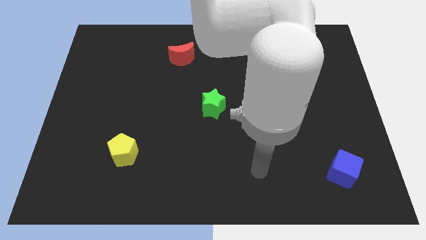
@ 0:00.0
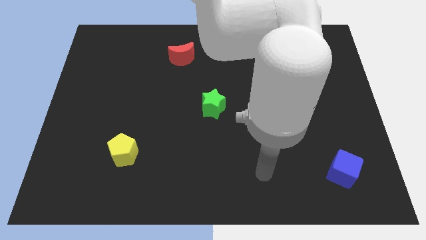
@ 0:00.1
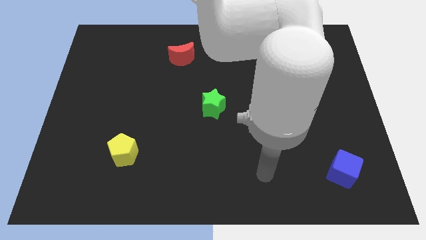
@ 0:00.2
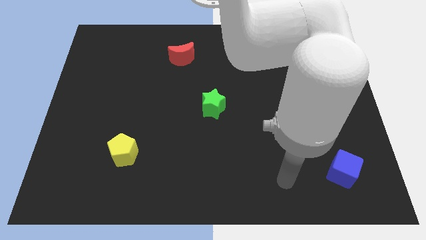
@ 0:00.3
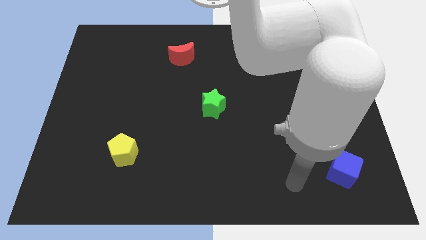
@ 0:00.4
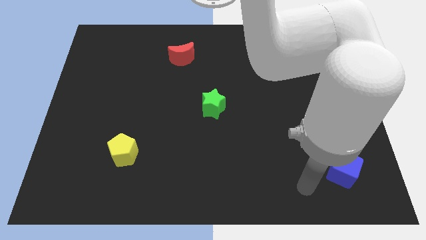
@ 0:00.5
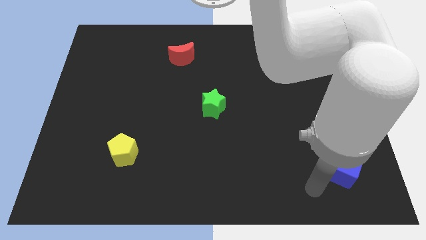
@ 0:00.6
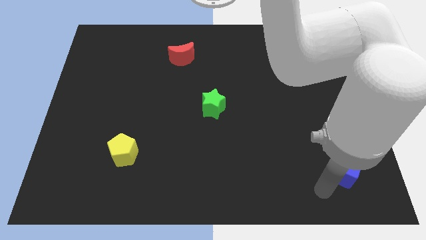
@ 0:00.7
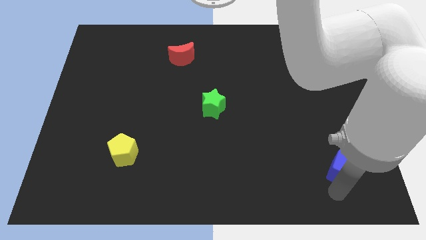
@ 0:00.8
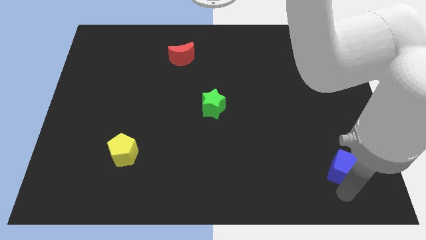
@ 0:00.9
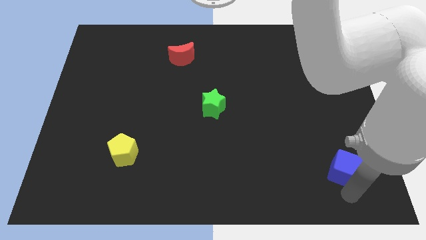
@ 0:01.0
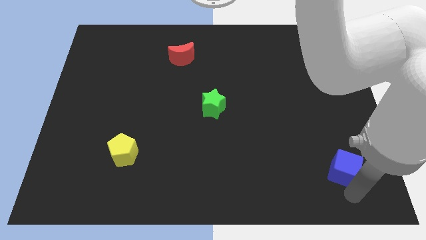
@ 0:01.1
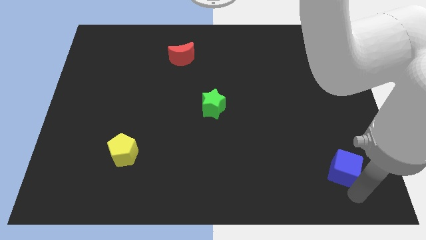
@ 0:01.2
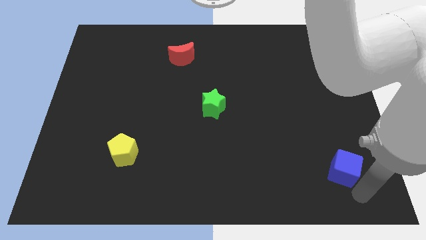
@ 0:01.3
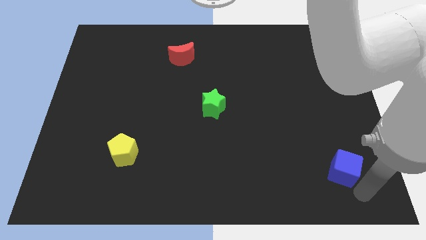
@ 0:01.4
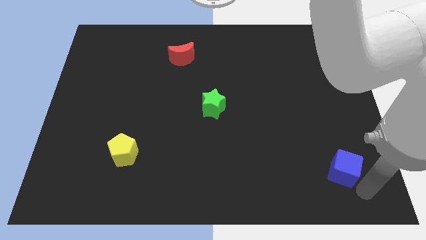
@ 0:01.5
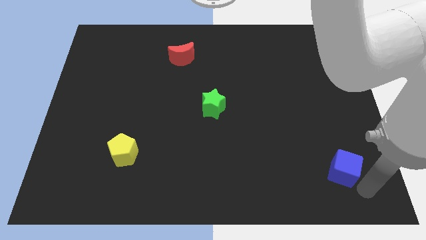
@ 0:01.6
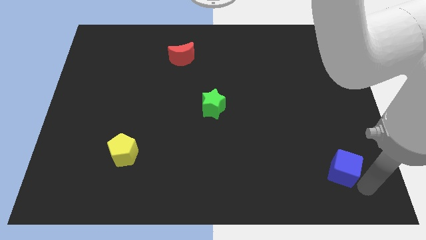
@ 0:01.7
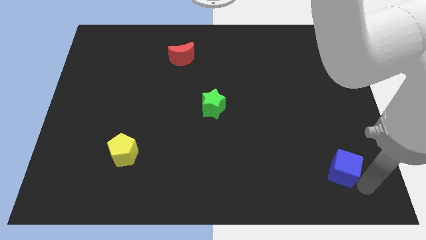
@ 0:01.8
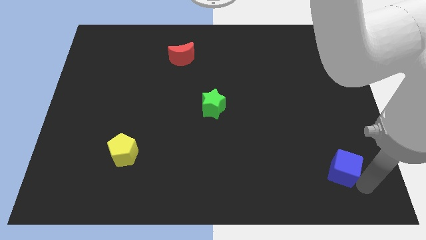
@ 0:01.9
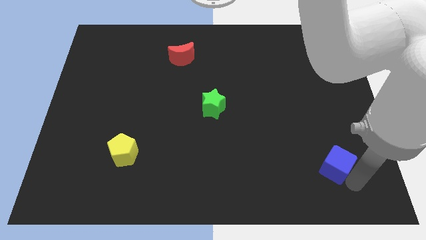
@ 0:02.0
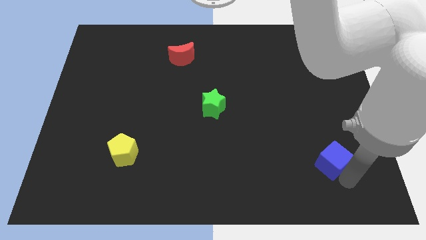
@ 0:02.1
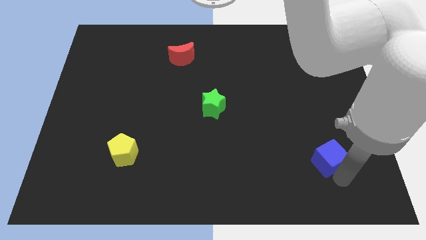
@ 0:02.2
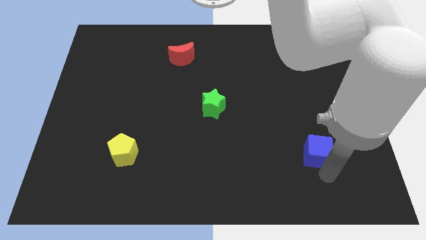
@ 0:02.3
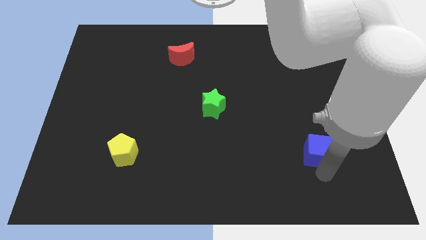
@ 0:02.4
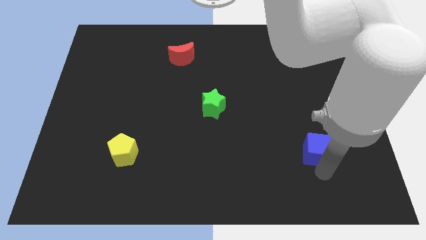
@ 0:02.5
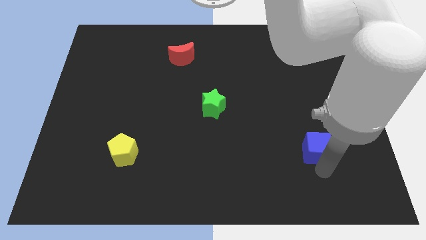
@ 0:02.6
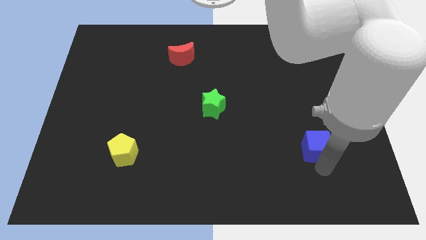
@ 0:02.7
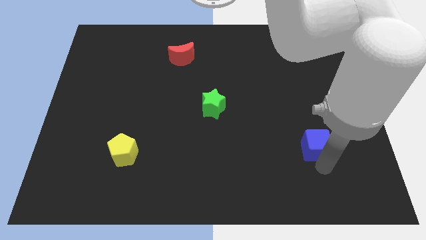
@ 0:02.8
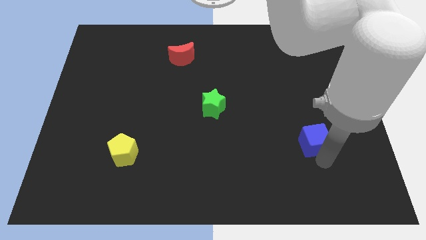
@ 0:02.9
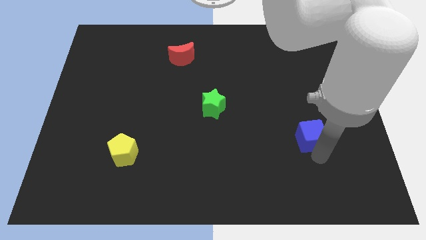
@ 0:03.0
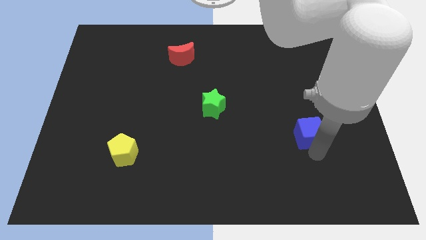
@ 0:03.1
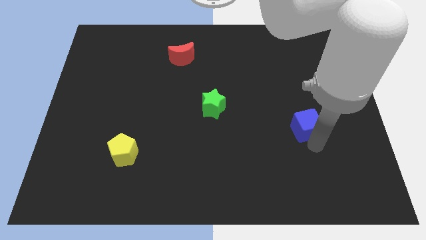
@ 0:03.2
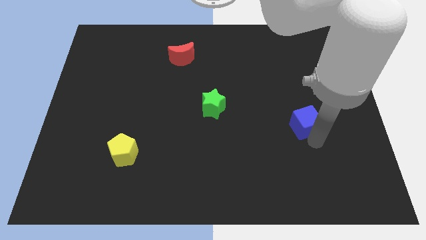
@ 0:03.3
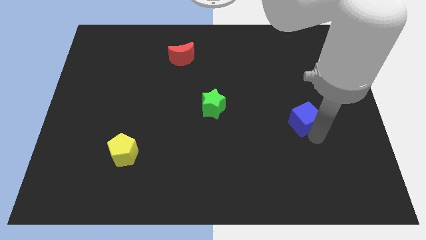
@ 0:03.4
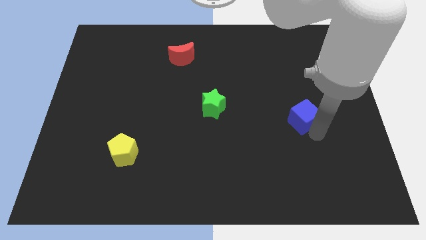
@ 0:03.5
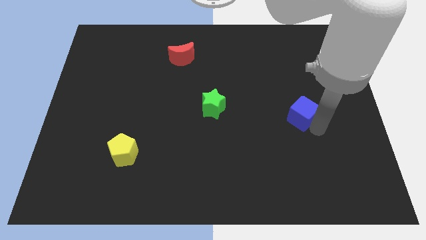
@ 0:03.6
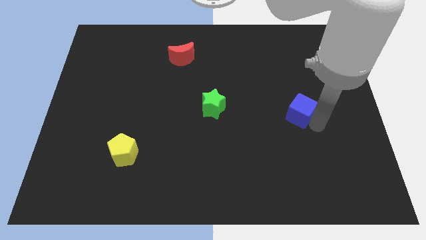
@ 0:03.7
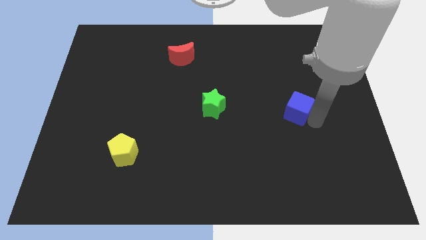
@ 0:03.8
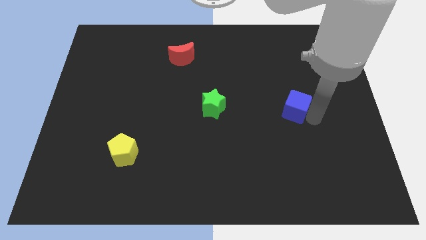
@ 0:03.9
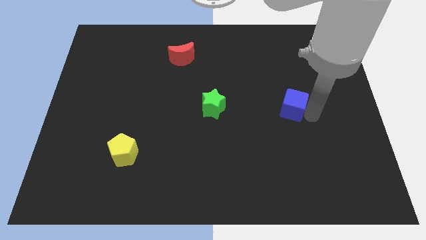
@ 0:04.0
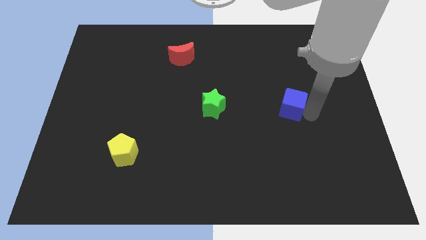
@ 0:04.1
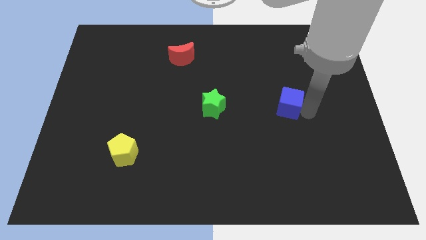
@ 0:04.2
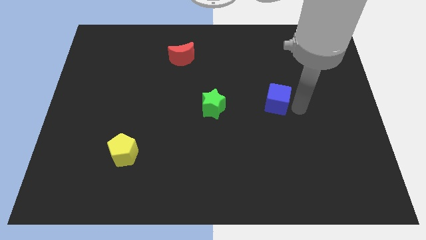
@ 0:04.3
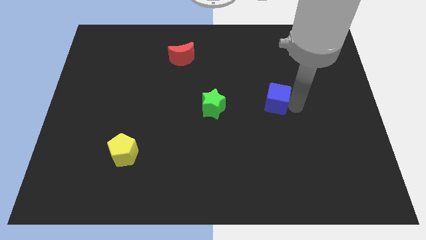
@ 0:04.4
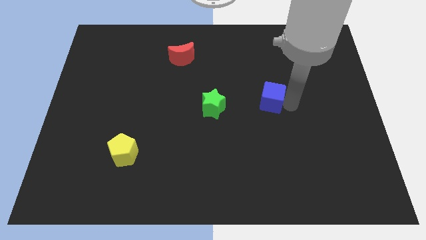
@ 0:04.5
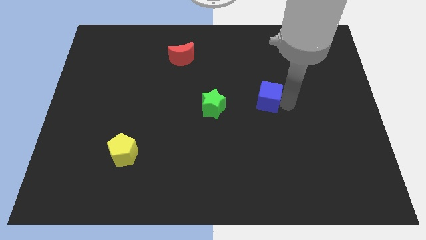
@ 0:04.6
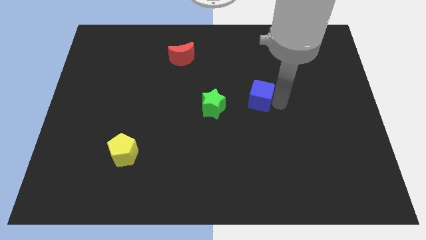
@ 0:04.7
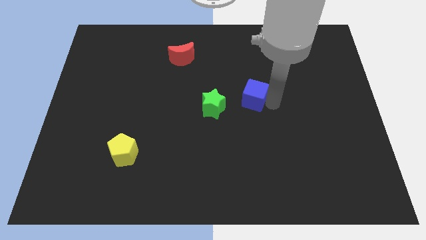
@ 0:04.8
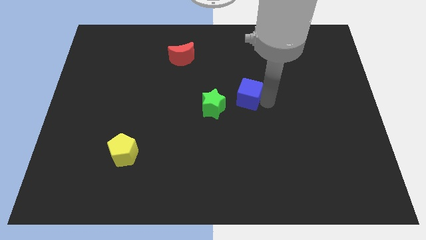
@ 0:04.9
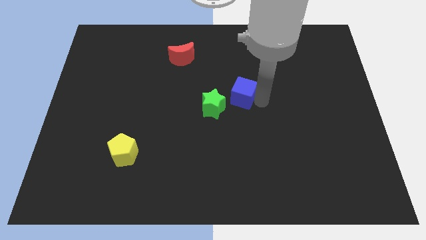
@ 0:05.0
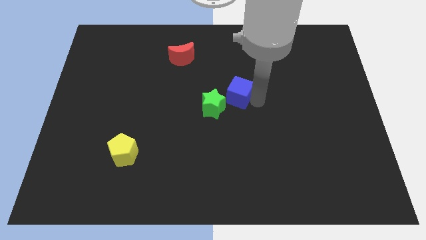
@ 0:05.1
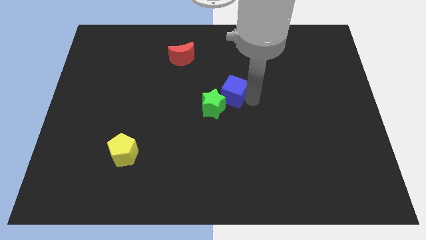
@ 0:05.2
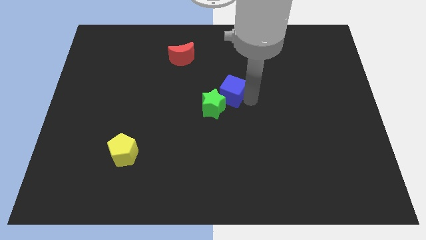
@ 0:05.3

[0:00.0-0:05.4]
push the cube next to the star

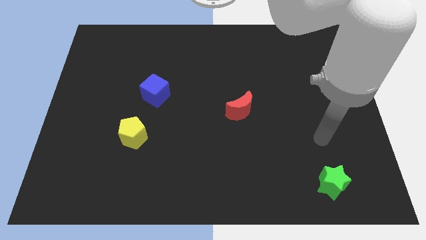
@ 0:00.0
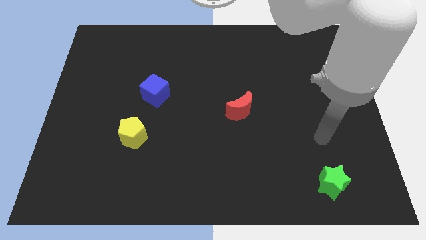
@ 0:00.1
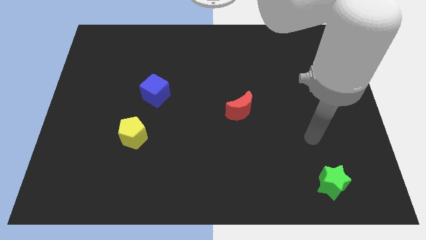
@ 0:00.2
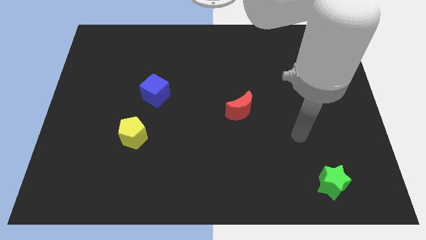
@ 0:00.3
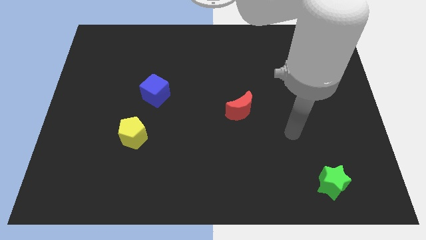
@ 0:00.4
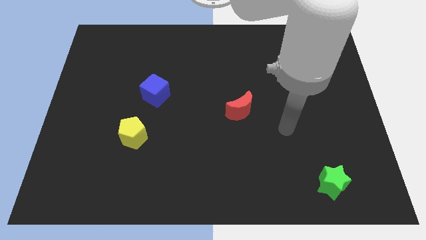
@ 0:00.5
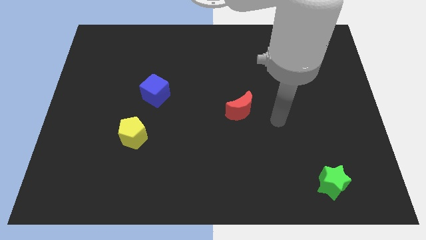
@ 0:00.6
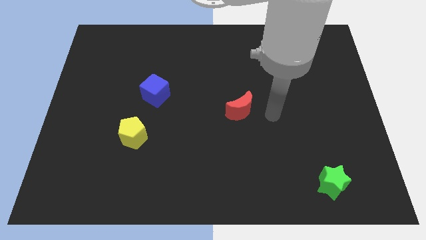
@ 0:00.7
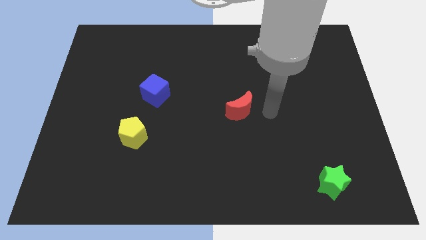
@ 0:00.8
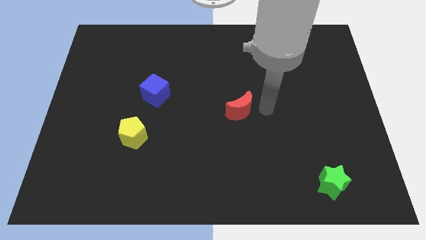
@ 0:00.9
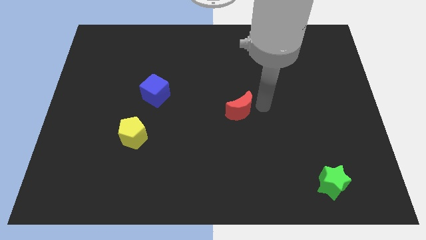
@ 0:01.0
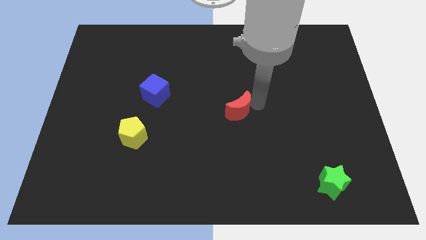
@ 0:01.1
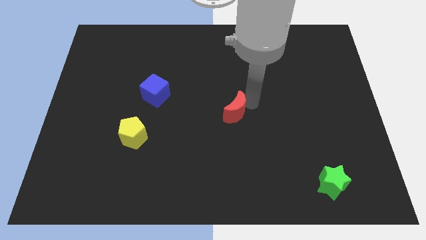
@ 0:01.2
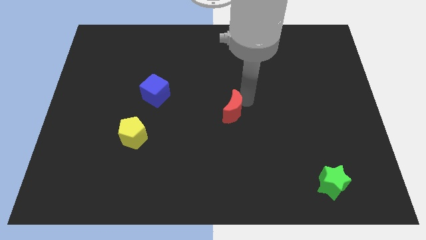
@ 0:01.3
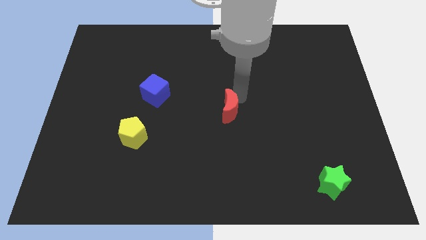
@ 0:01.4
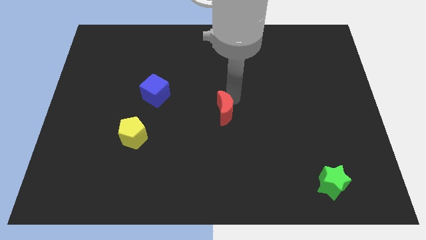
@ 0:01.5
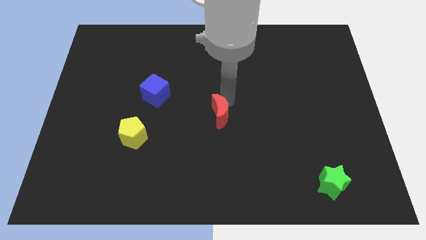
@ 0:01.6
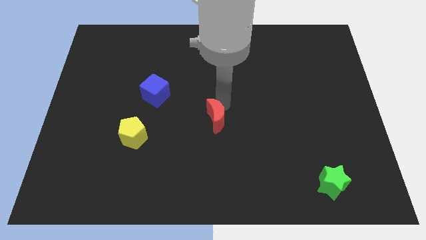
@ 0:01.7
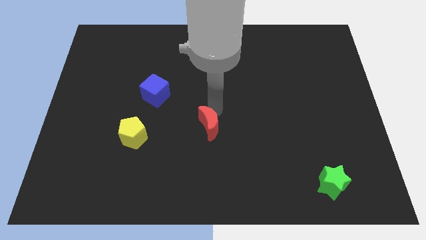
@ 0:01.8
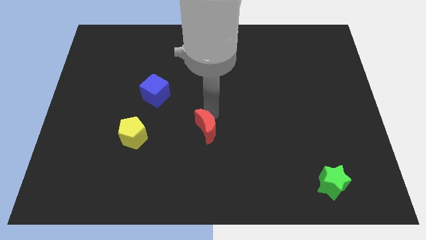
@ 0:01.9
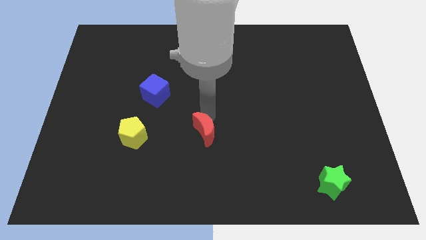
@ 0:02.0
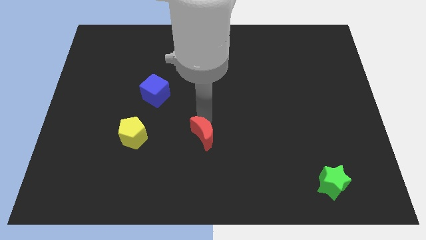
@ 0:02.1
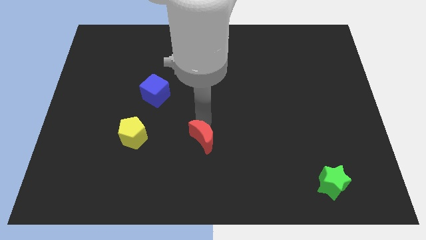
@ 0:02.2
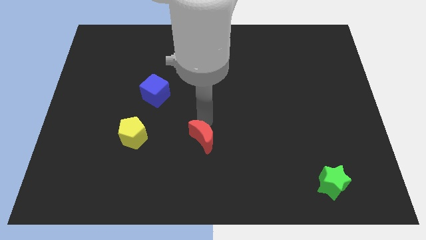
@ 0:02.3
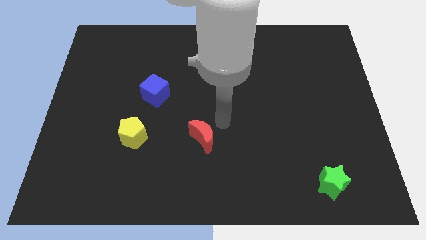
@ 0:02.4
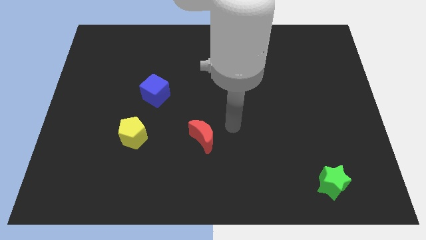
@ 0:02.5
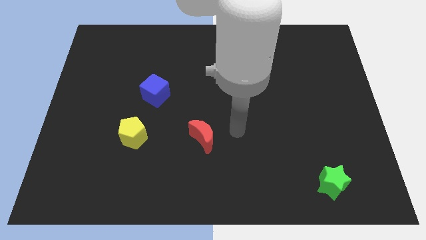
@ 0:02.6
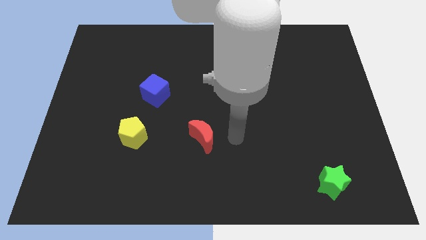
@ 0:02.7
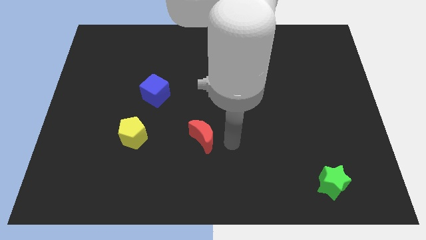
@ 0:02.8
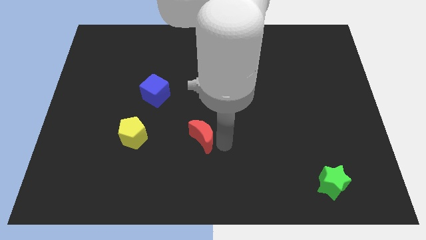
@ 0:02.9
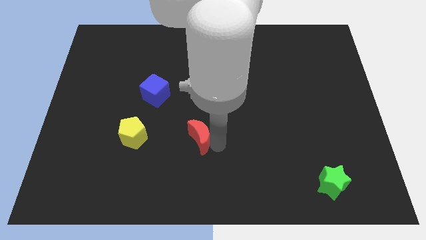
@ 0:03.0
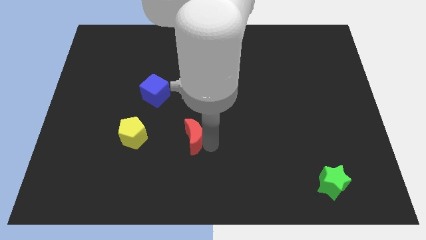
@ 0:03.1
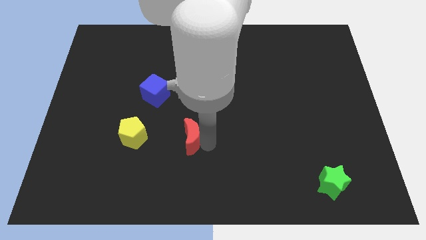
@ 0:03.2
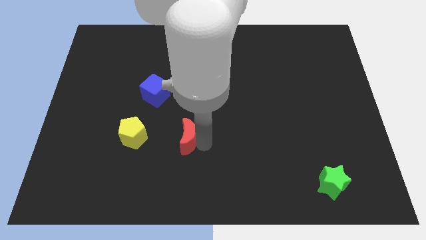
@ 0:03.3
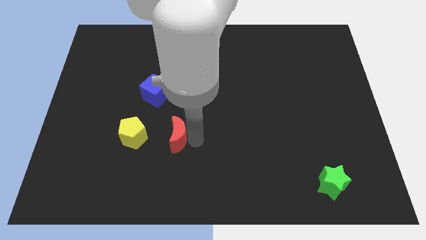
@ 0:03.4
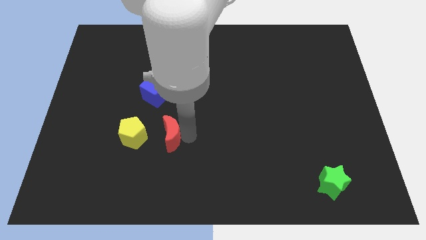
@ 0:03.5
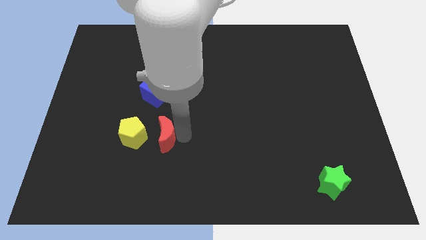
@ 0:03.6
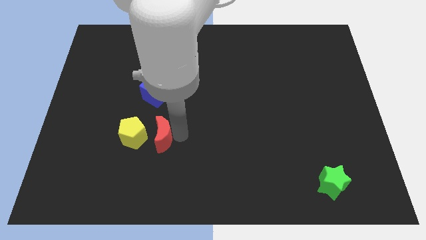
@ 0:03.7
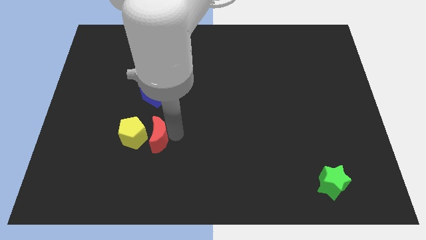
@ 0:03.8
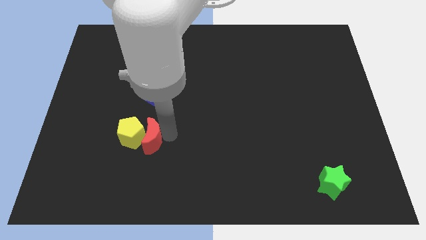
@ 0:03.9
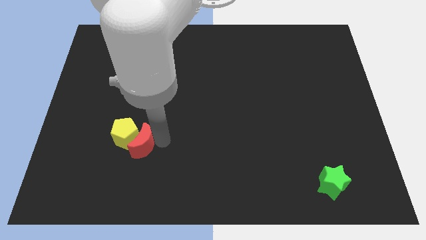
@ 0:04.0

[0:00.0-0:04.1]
put the red block to the pentagon
